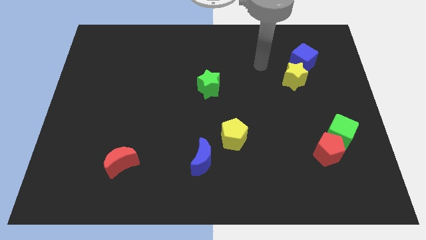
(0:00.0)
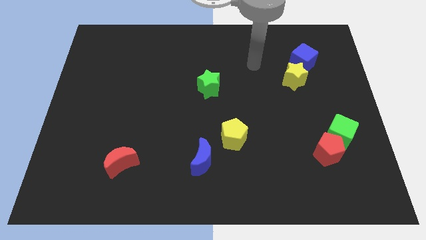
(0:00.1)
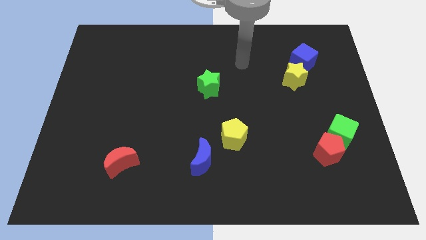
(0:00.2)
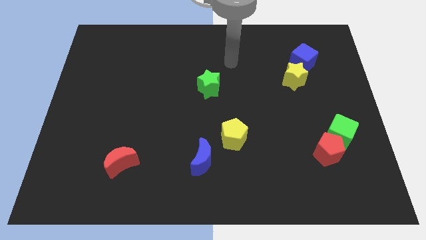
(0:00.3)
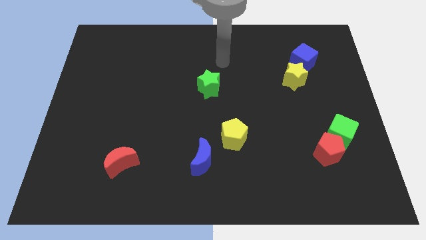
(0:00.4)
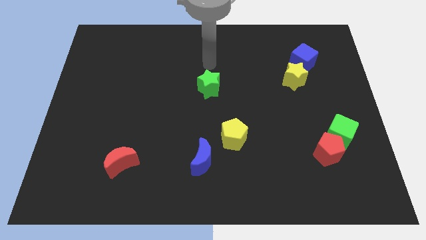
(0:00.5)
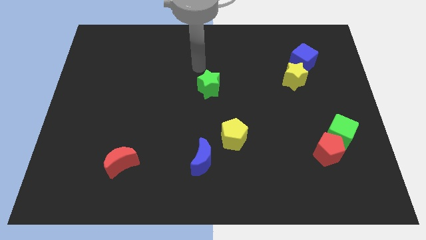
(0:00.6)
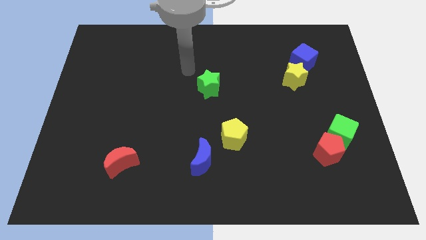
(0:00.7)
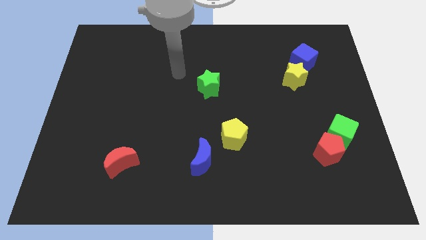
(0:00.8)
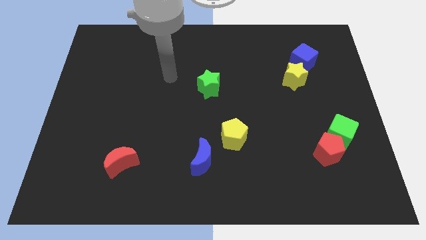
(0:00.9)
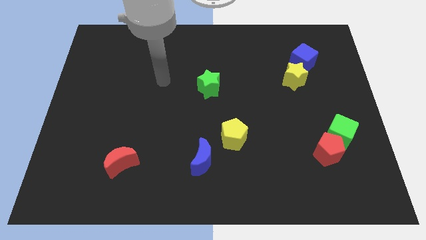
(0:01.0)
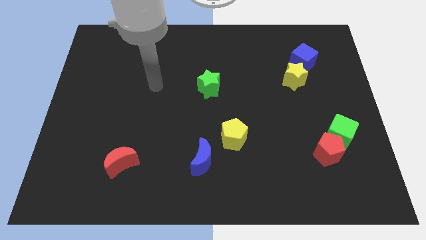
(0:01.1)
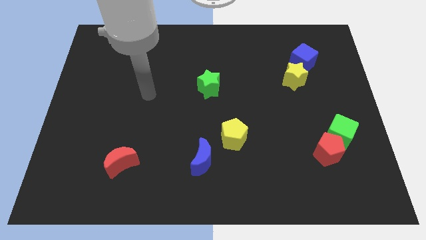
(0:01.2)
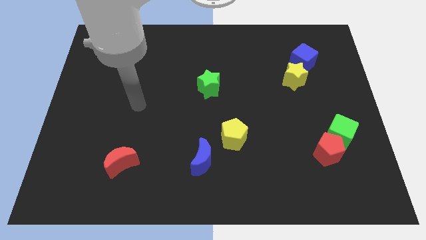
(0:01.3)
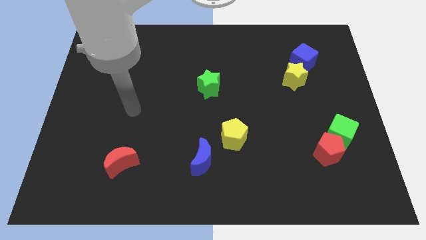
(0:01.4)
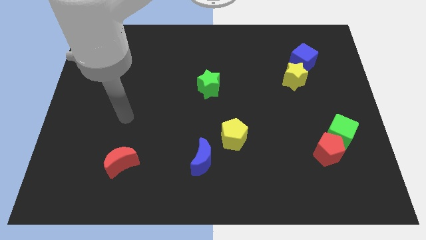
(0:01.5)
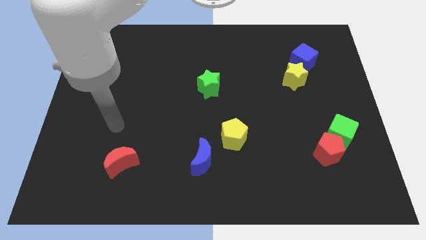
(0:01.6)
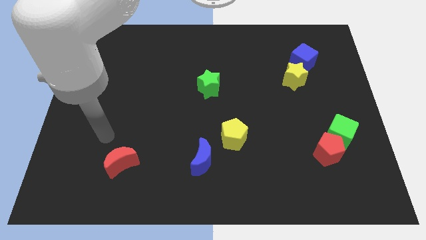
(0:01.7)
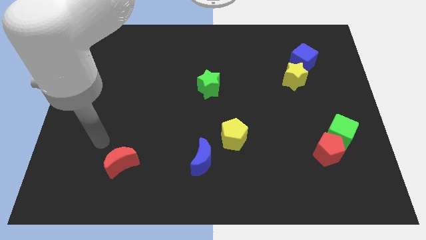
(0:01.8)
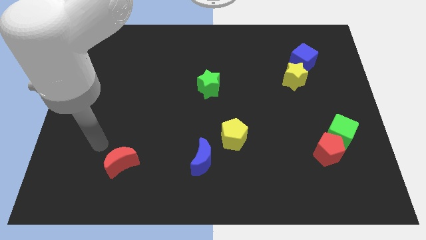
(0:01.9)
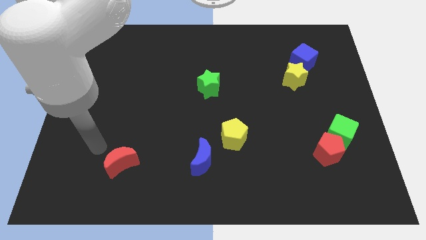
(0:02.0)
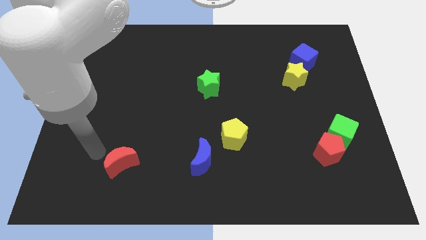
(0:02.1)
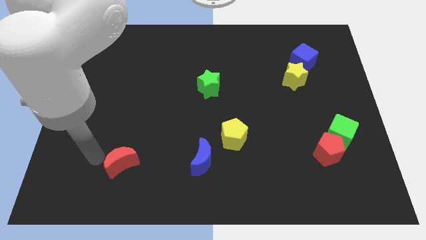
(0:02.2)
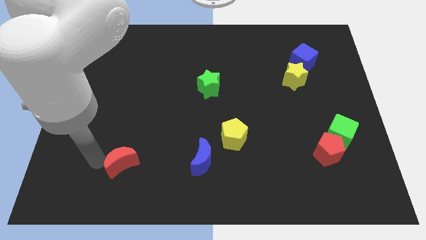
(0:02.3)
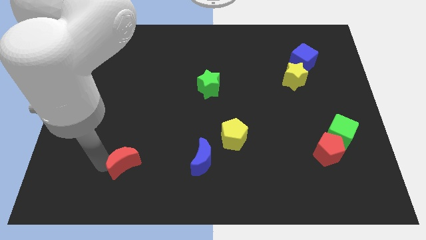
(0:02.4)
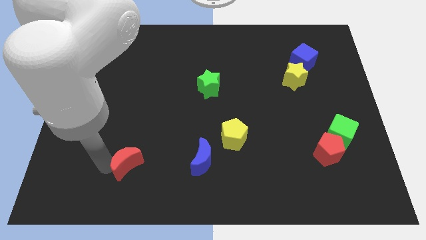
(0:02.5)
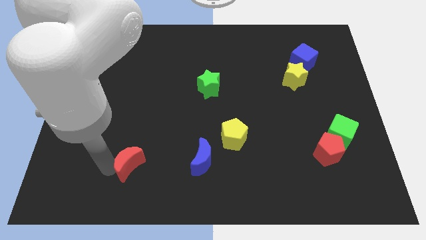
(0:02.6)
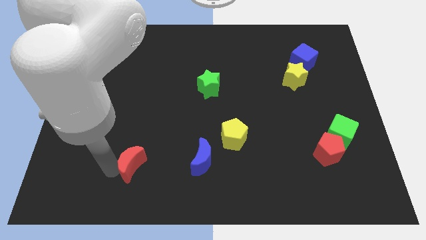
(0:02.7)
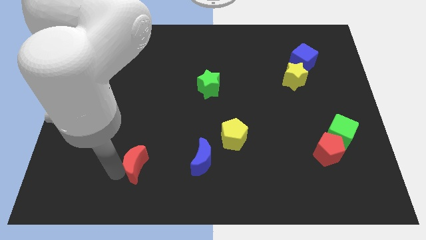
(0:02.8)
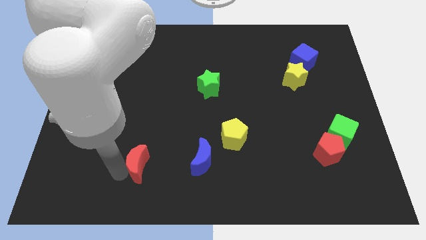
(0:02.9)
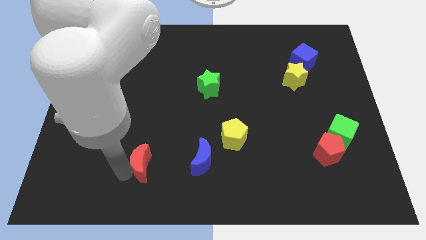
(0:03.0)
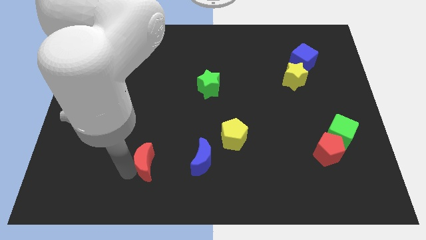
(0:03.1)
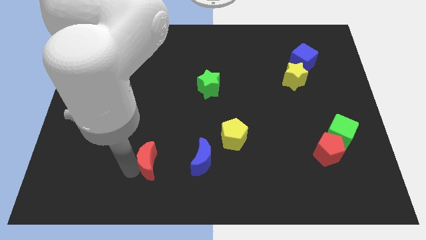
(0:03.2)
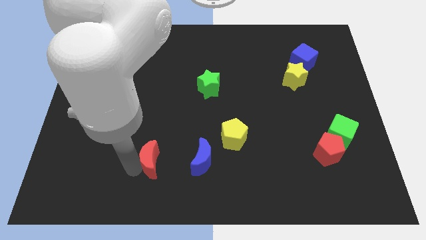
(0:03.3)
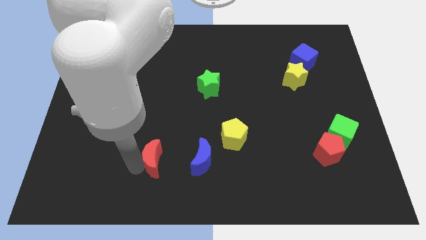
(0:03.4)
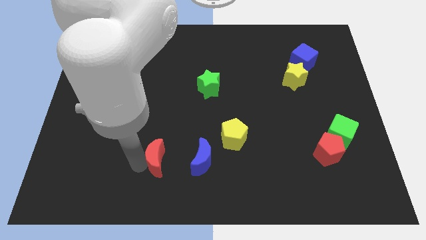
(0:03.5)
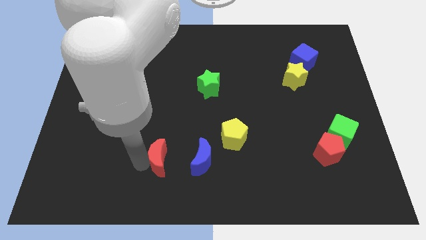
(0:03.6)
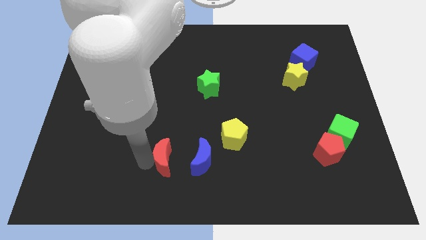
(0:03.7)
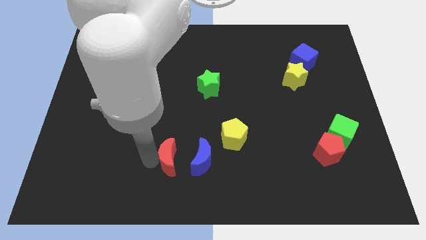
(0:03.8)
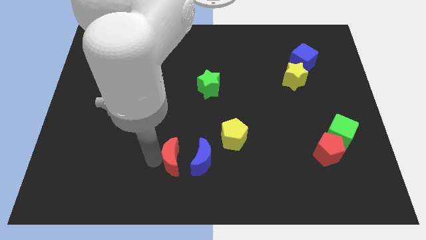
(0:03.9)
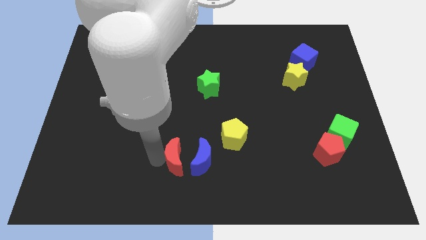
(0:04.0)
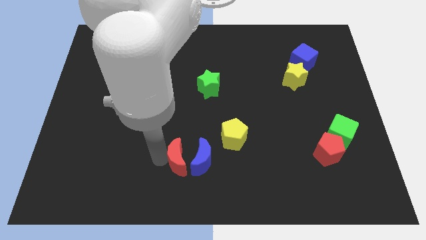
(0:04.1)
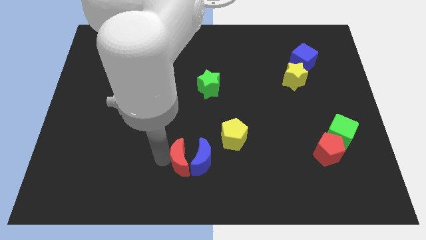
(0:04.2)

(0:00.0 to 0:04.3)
push the red moon towards the blue moon

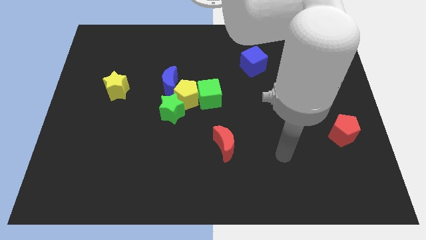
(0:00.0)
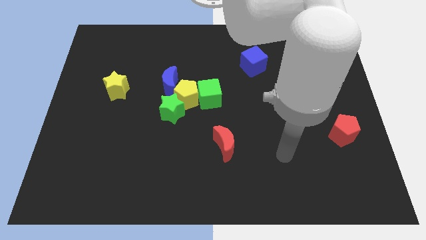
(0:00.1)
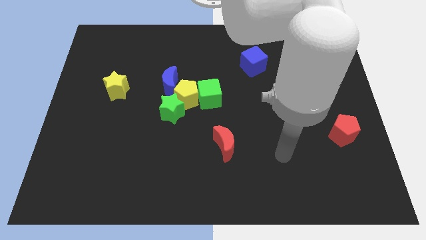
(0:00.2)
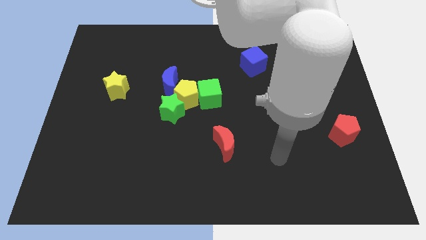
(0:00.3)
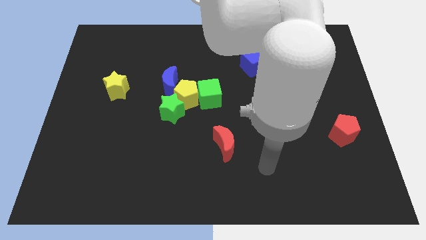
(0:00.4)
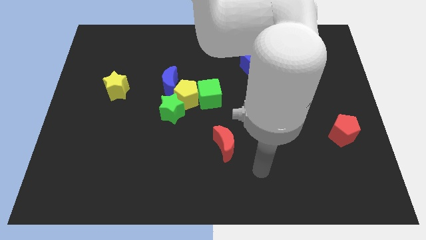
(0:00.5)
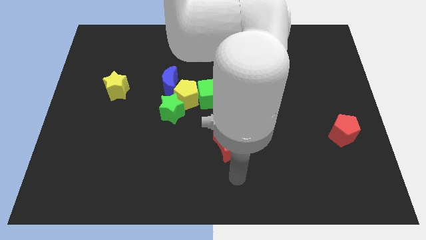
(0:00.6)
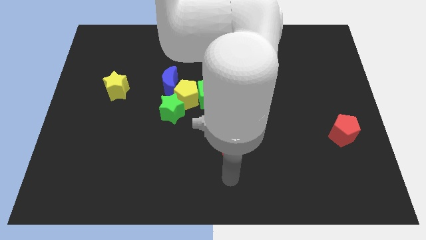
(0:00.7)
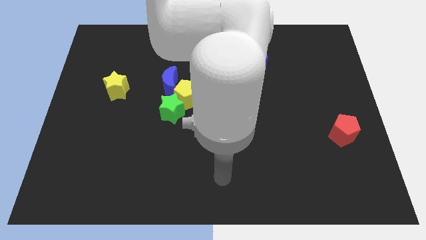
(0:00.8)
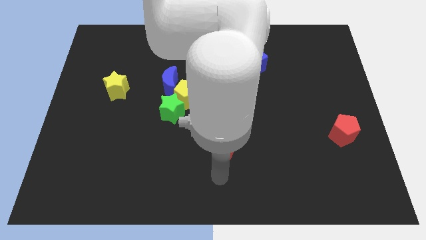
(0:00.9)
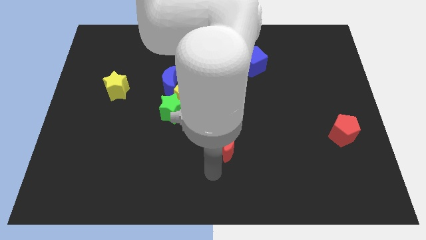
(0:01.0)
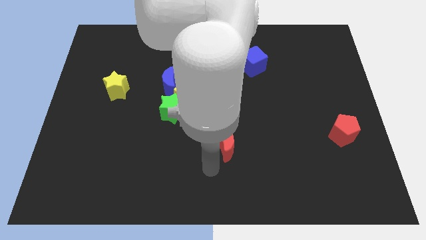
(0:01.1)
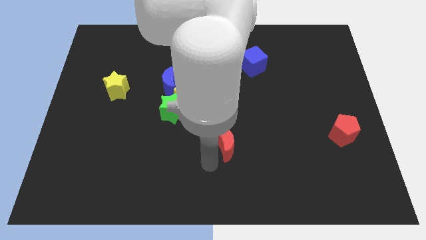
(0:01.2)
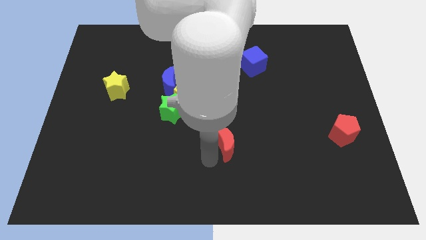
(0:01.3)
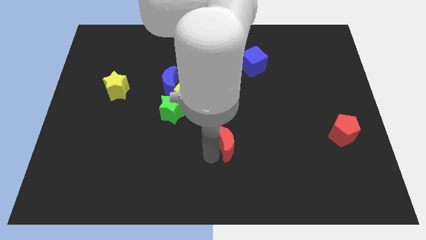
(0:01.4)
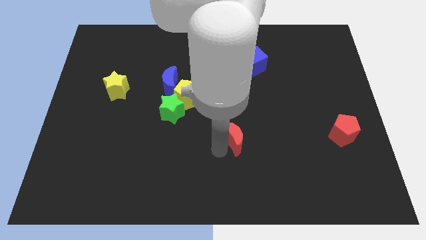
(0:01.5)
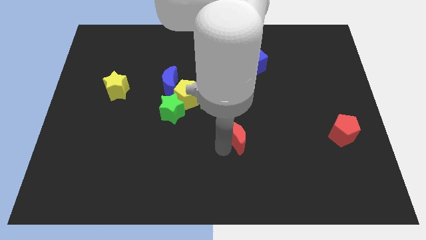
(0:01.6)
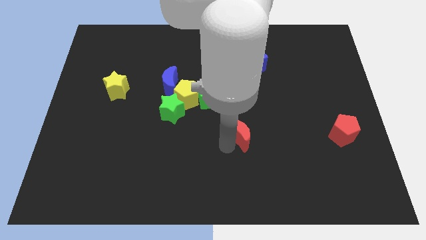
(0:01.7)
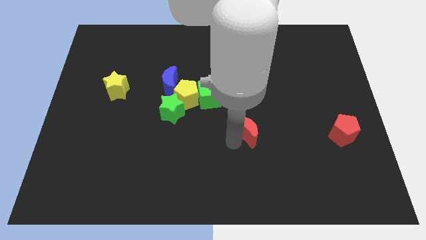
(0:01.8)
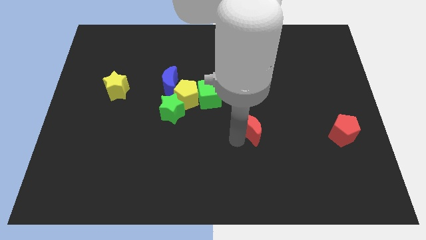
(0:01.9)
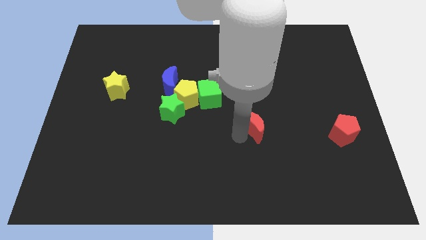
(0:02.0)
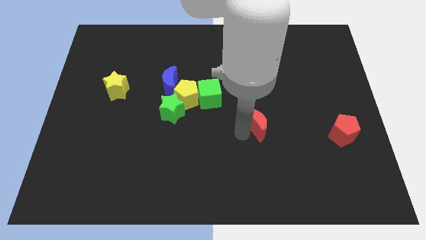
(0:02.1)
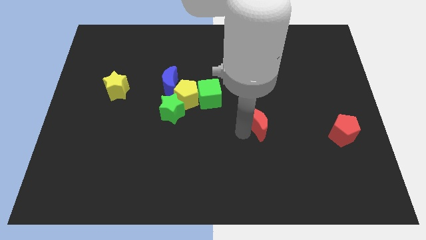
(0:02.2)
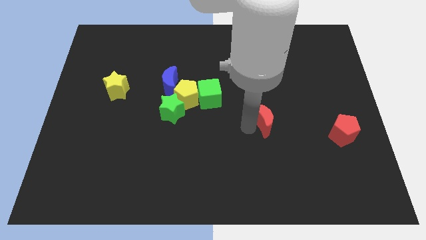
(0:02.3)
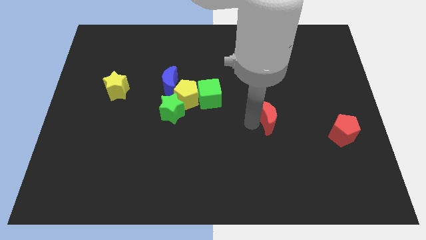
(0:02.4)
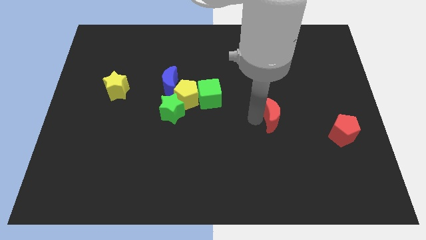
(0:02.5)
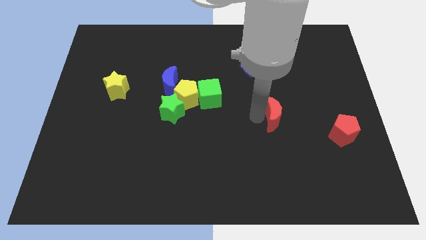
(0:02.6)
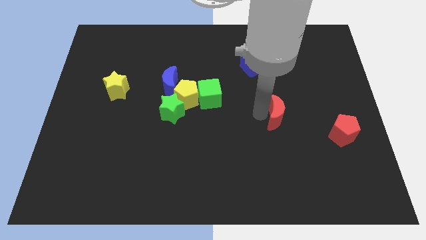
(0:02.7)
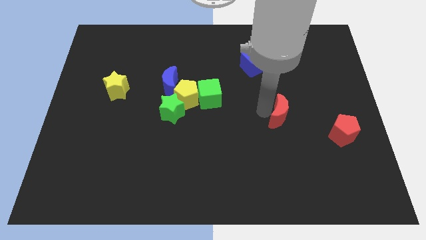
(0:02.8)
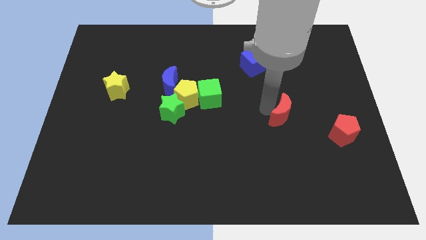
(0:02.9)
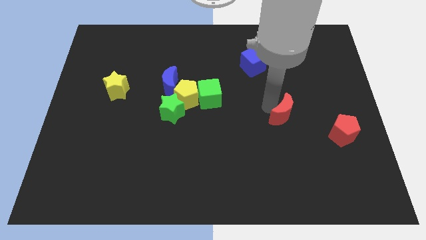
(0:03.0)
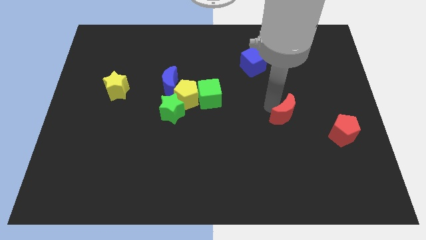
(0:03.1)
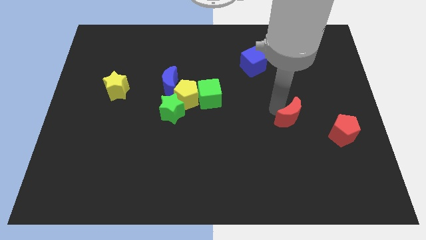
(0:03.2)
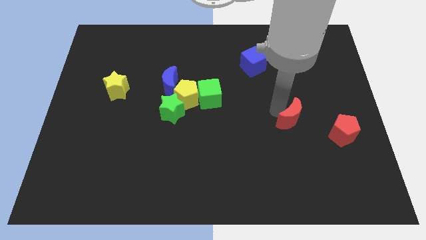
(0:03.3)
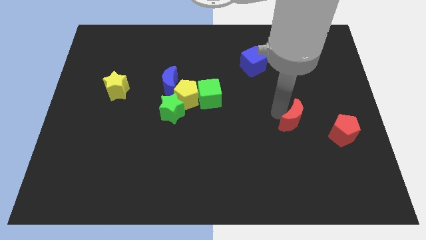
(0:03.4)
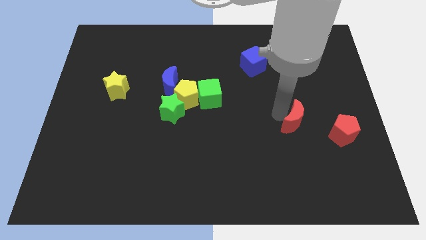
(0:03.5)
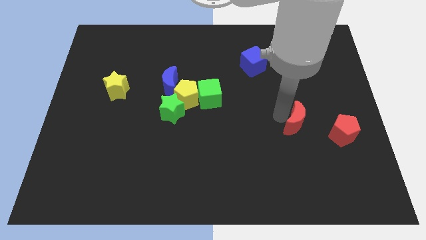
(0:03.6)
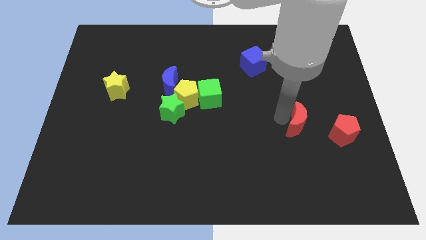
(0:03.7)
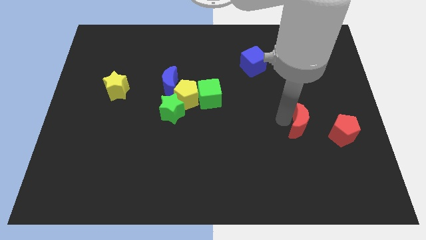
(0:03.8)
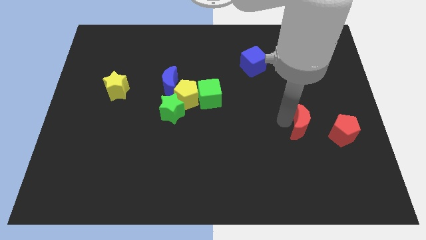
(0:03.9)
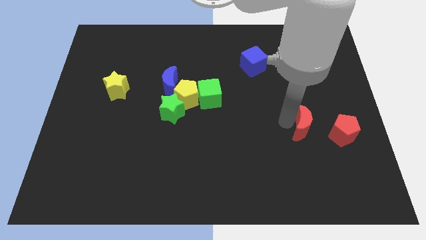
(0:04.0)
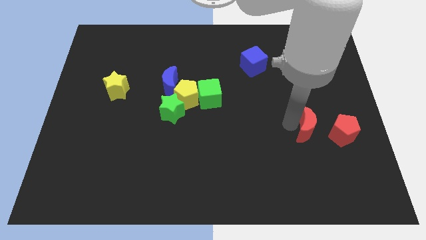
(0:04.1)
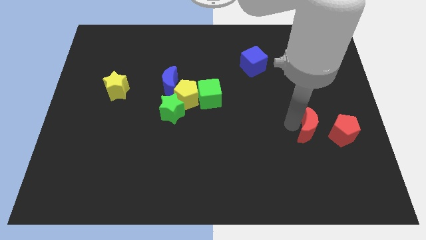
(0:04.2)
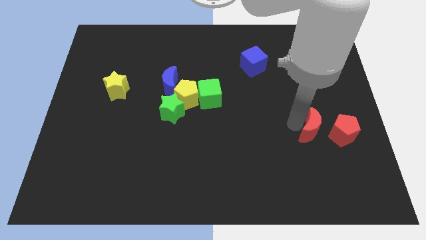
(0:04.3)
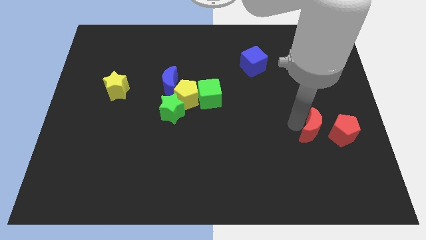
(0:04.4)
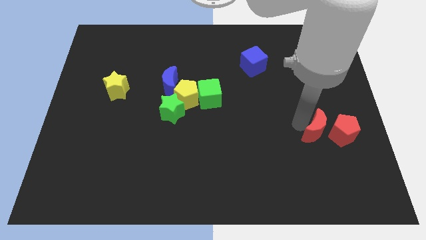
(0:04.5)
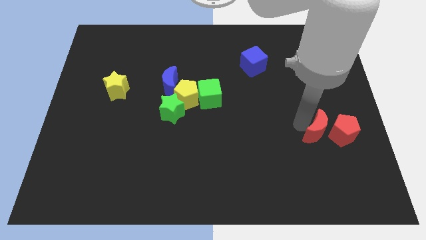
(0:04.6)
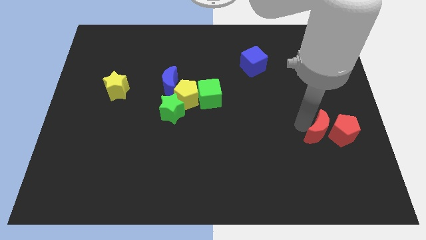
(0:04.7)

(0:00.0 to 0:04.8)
move the red moon towards the red pentagon
